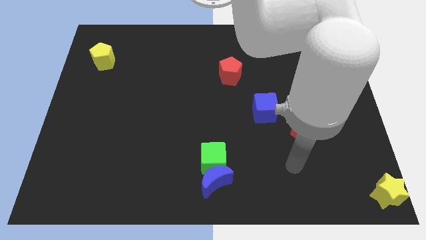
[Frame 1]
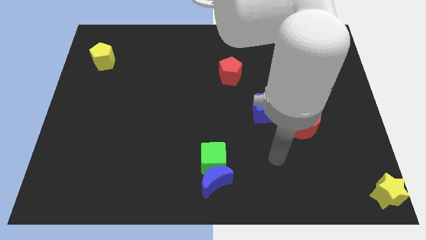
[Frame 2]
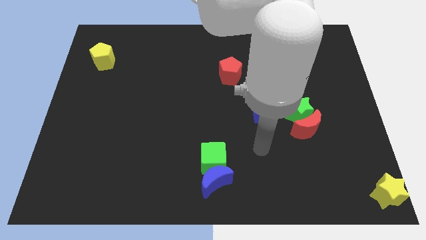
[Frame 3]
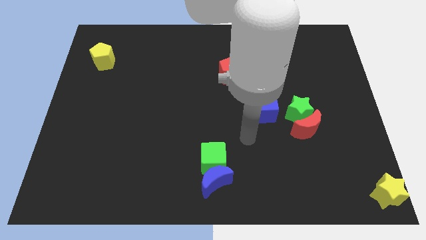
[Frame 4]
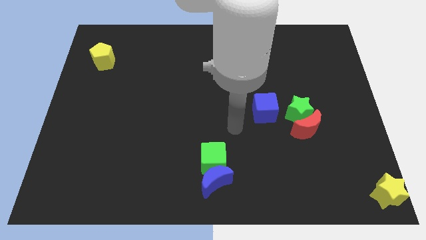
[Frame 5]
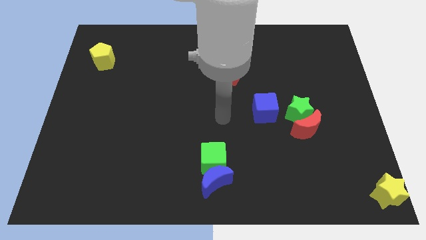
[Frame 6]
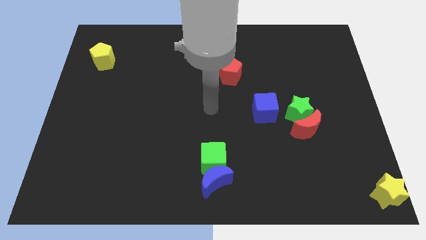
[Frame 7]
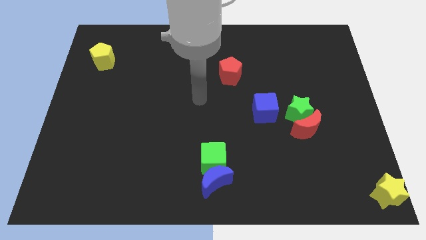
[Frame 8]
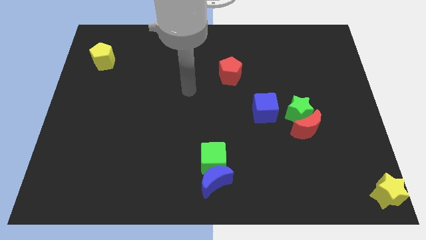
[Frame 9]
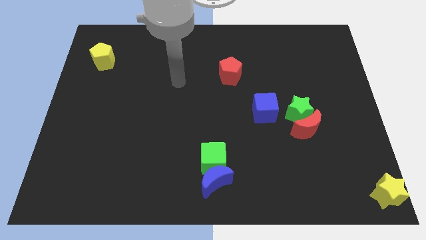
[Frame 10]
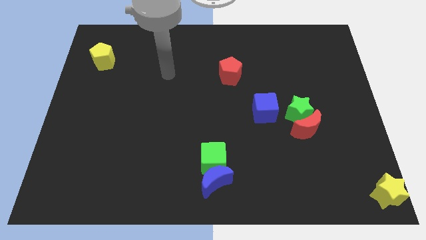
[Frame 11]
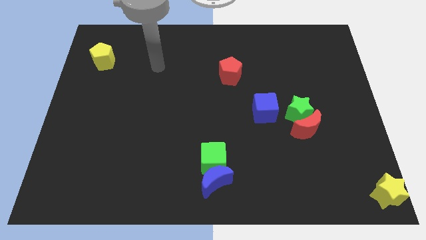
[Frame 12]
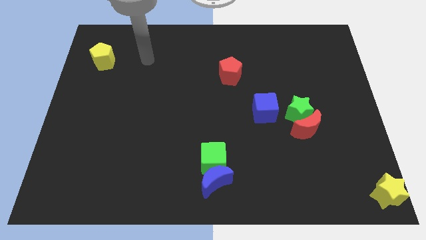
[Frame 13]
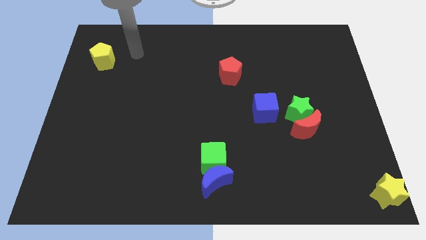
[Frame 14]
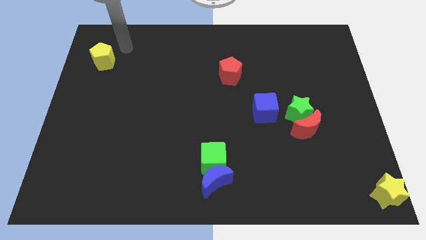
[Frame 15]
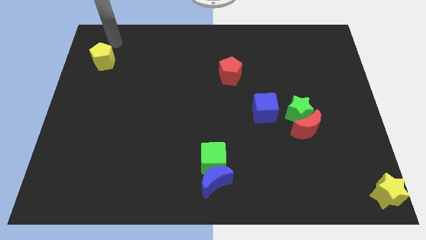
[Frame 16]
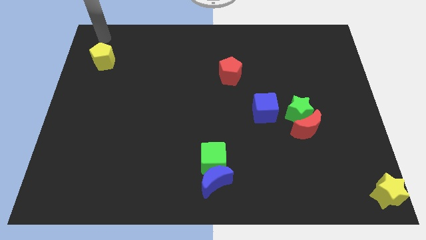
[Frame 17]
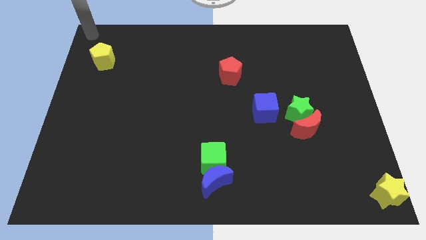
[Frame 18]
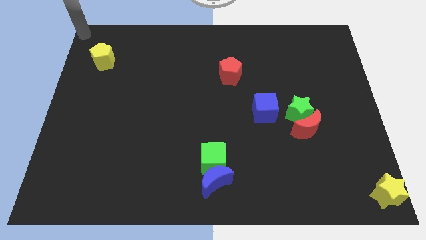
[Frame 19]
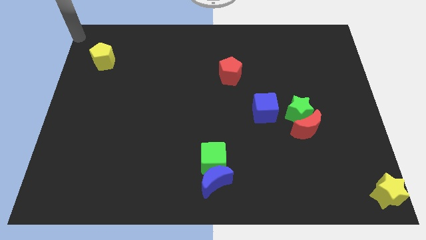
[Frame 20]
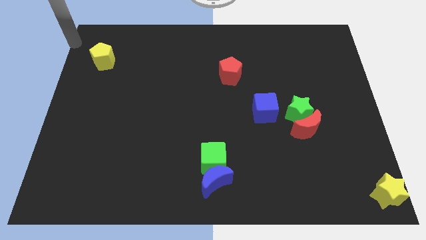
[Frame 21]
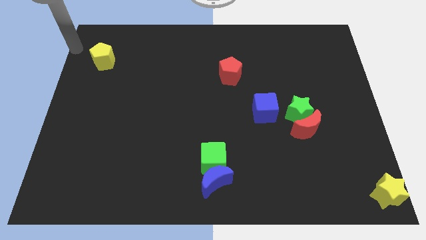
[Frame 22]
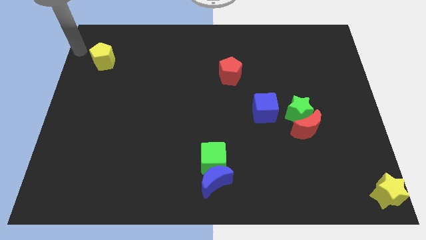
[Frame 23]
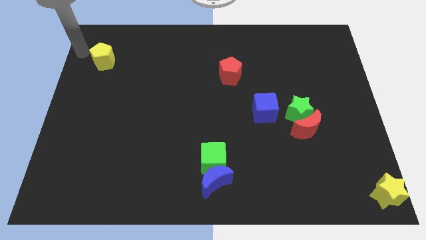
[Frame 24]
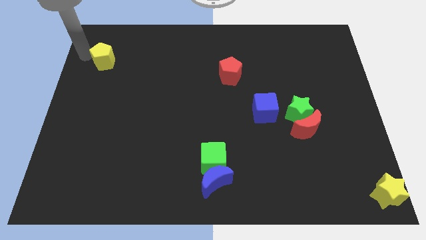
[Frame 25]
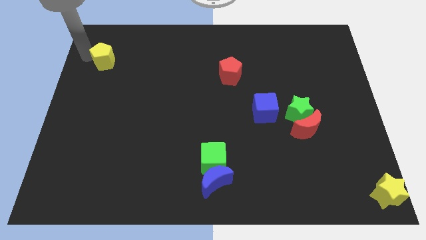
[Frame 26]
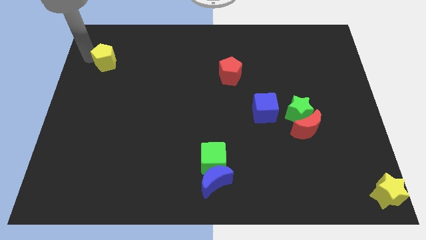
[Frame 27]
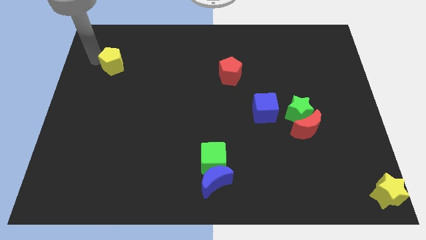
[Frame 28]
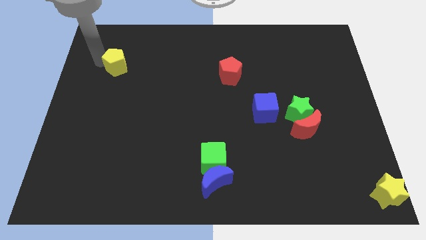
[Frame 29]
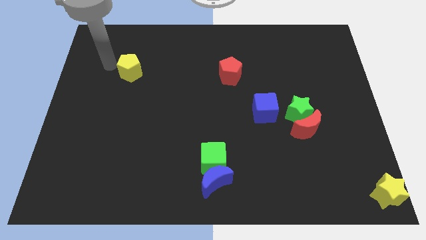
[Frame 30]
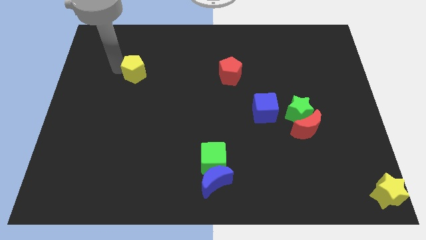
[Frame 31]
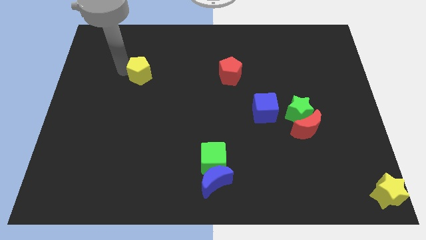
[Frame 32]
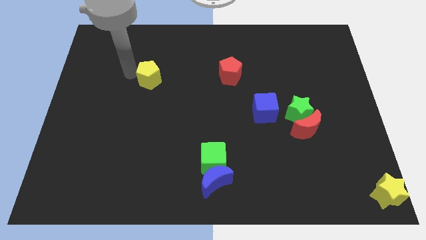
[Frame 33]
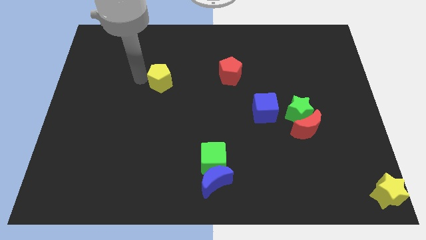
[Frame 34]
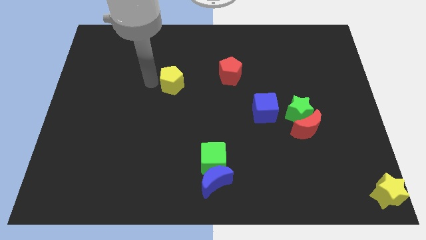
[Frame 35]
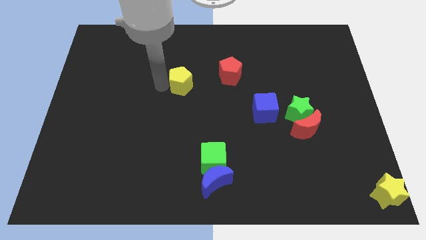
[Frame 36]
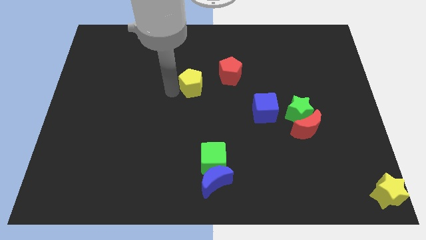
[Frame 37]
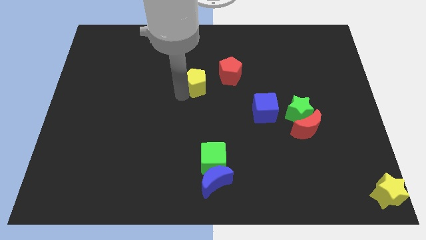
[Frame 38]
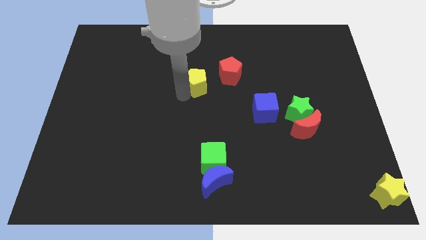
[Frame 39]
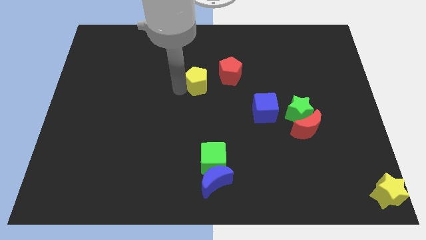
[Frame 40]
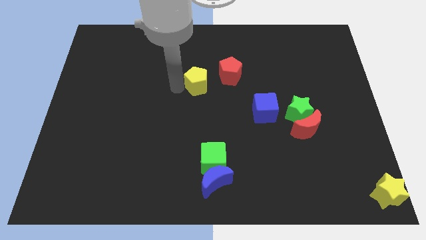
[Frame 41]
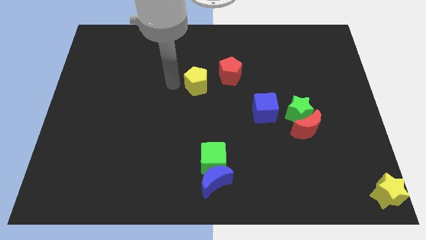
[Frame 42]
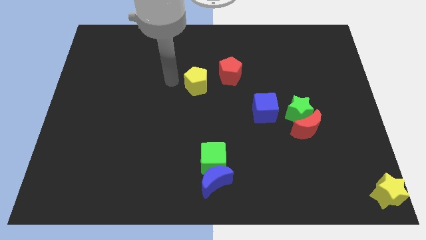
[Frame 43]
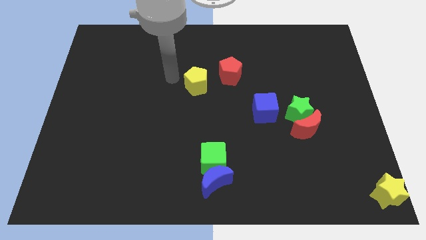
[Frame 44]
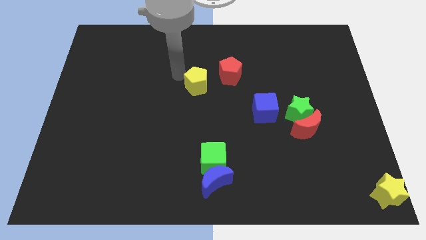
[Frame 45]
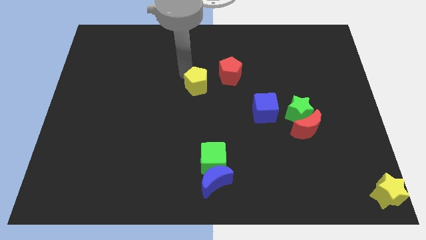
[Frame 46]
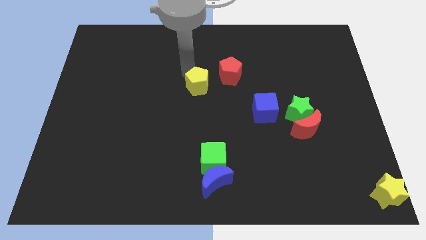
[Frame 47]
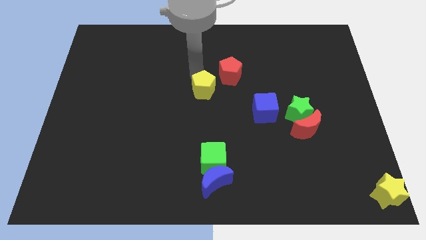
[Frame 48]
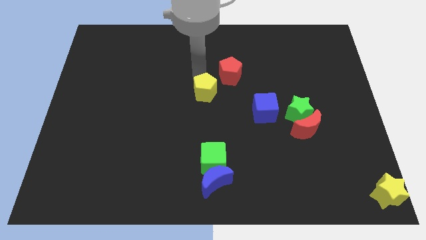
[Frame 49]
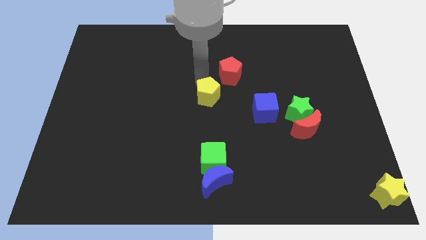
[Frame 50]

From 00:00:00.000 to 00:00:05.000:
place the yellow pentagon diagnally bottom left to red pentagon

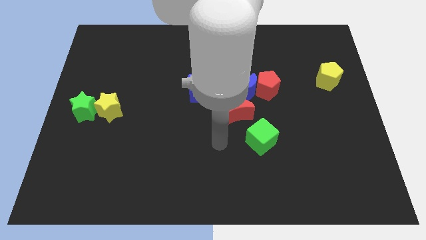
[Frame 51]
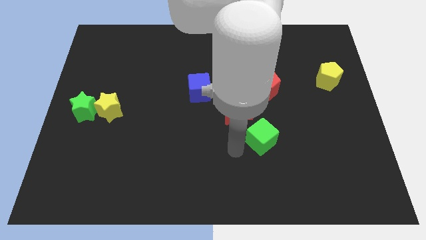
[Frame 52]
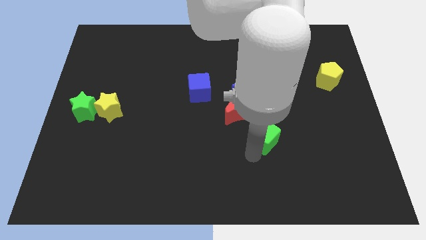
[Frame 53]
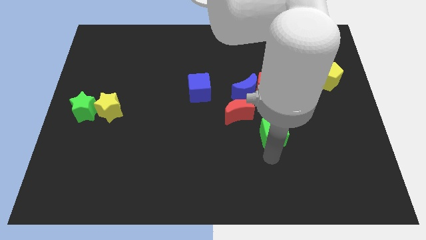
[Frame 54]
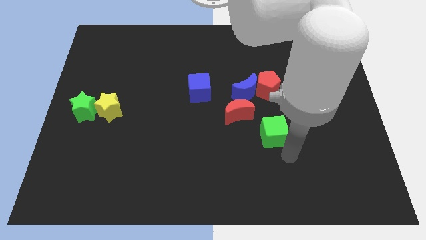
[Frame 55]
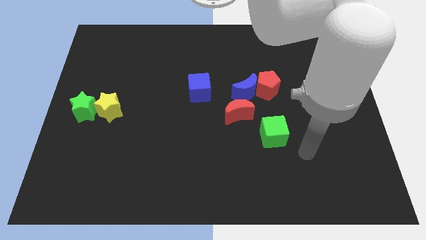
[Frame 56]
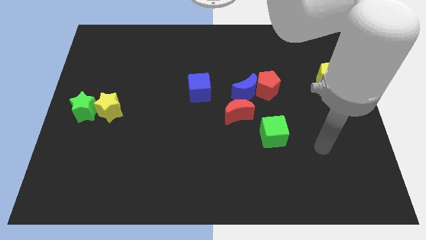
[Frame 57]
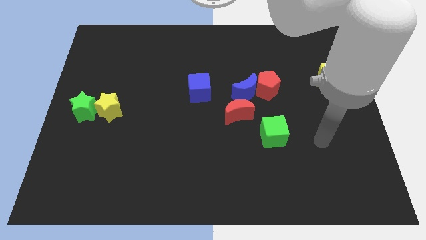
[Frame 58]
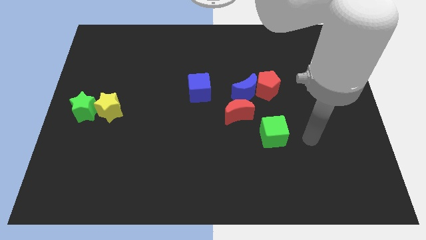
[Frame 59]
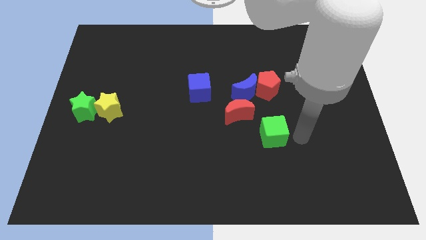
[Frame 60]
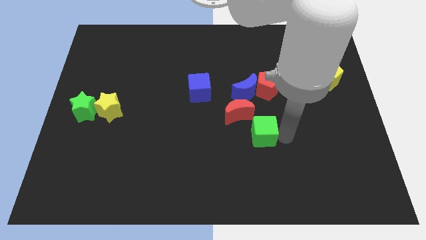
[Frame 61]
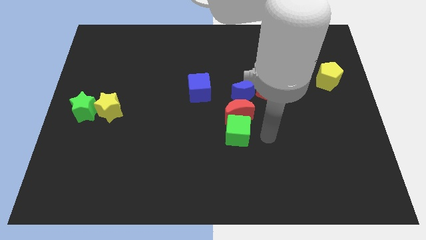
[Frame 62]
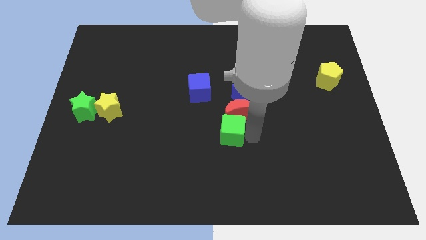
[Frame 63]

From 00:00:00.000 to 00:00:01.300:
move the green cube to the bottom red crescent

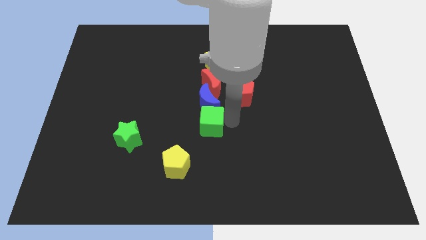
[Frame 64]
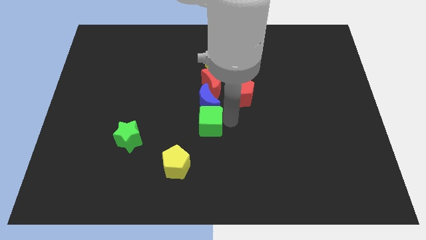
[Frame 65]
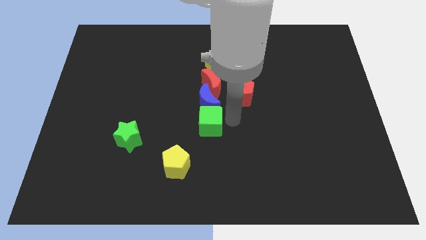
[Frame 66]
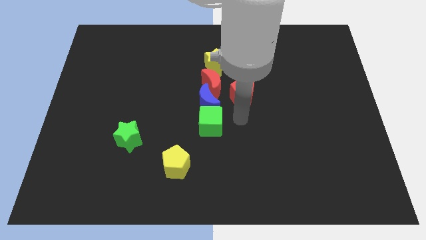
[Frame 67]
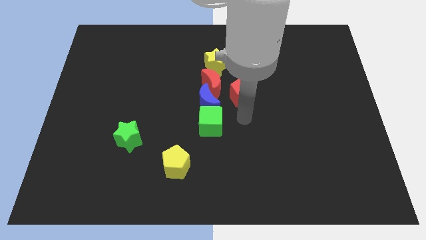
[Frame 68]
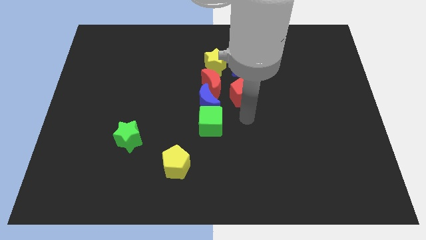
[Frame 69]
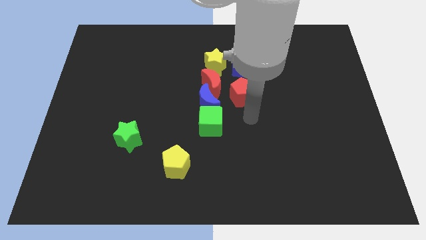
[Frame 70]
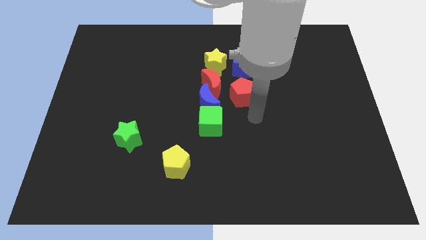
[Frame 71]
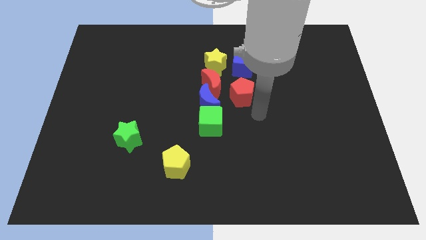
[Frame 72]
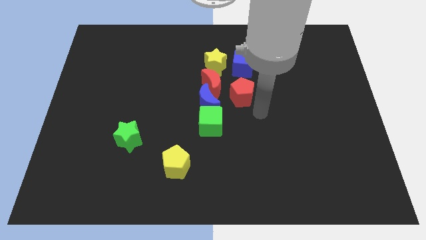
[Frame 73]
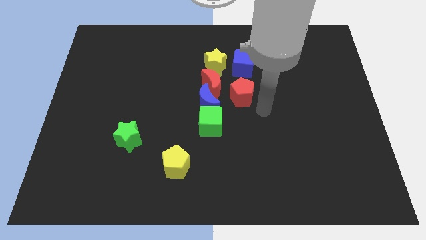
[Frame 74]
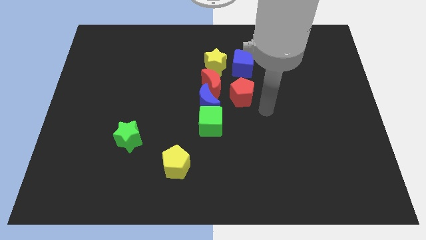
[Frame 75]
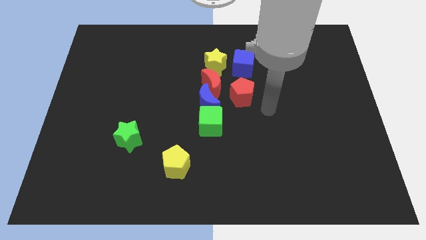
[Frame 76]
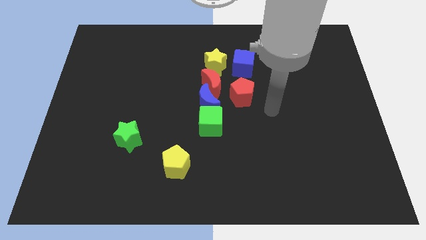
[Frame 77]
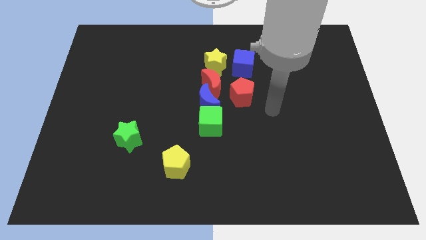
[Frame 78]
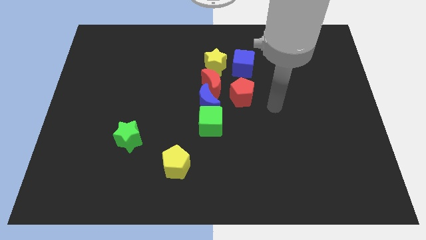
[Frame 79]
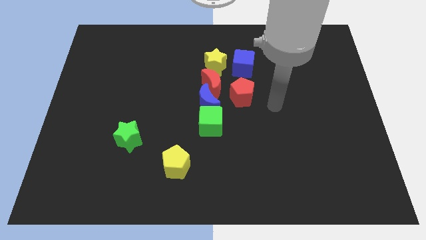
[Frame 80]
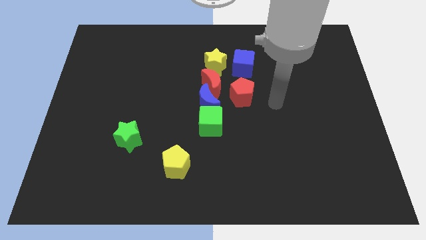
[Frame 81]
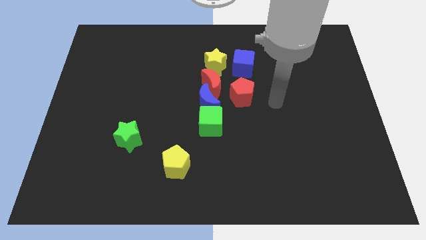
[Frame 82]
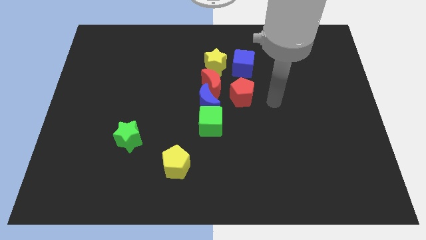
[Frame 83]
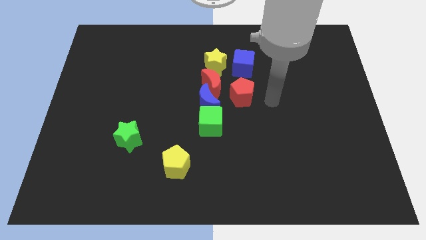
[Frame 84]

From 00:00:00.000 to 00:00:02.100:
move your arm away from green cube

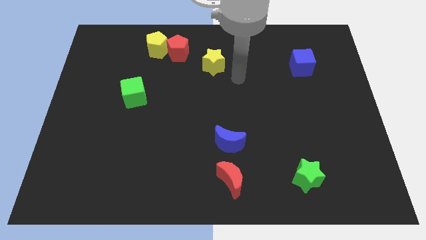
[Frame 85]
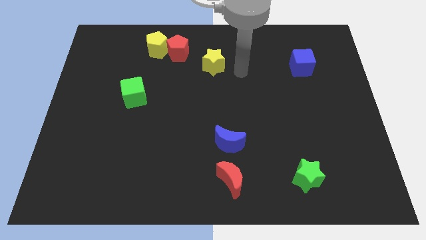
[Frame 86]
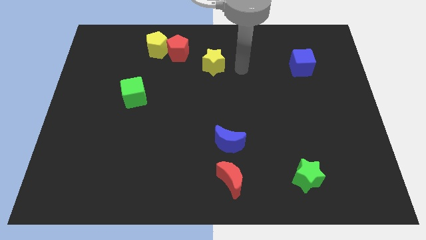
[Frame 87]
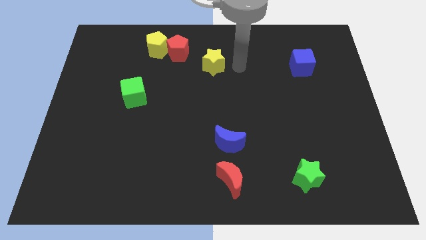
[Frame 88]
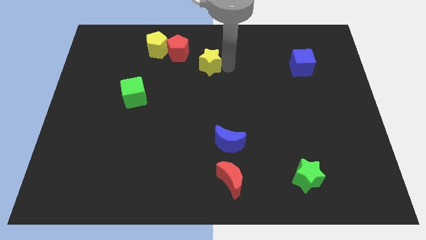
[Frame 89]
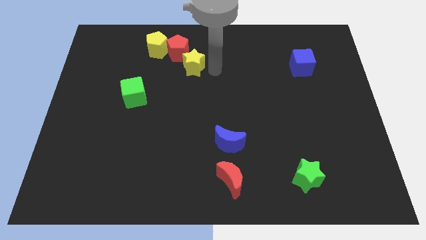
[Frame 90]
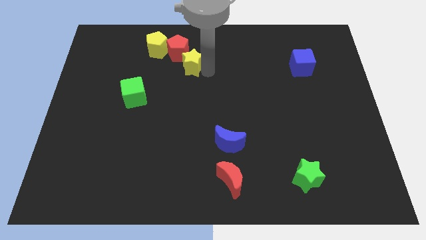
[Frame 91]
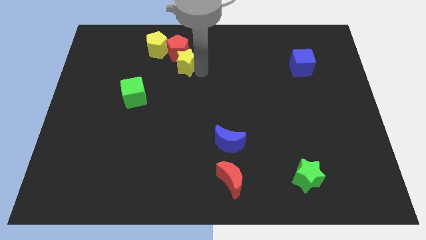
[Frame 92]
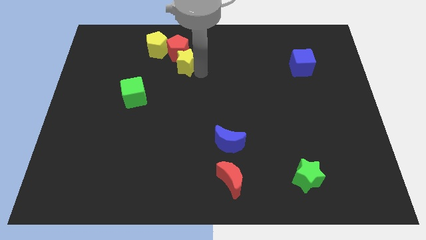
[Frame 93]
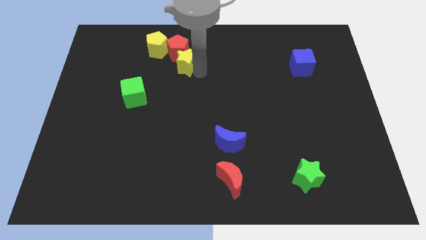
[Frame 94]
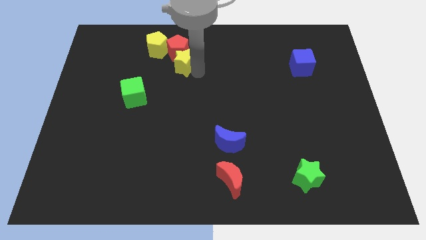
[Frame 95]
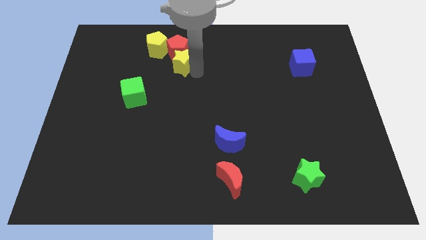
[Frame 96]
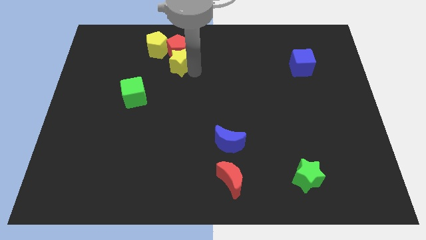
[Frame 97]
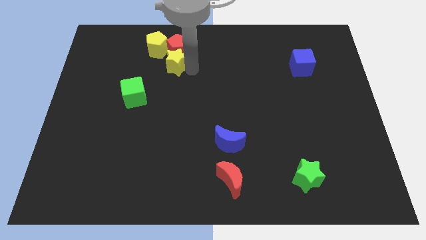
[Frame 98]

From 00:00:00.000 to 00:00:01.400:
put the yellow star vertically below the red pentagon
